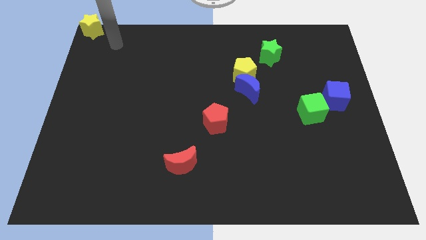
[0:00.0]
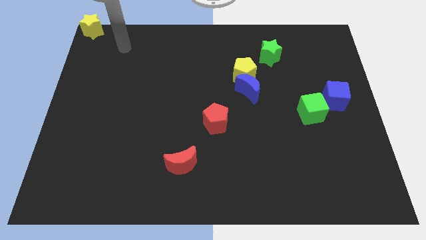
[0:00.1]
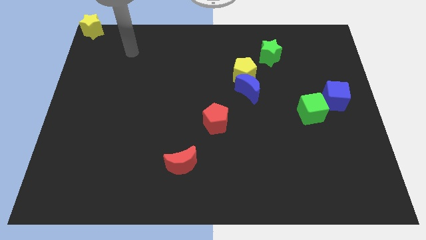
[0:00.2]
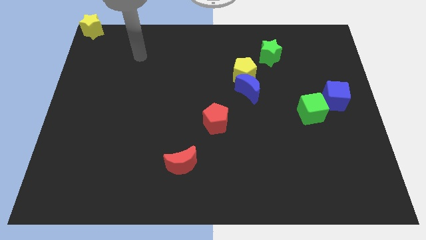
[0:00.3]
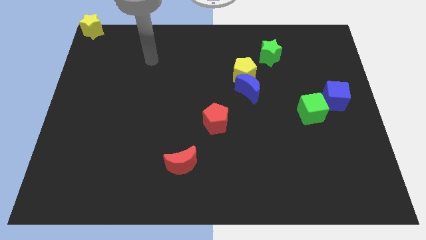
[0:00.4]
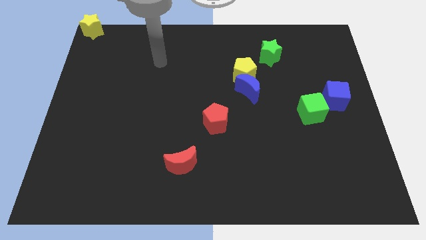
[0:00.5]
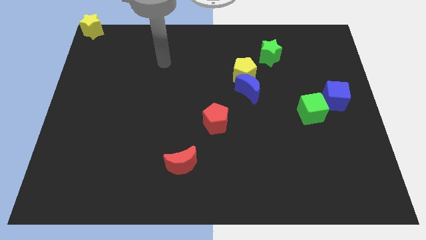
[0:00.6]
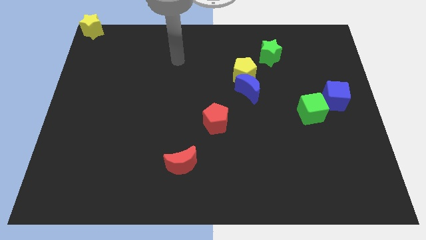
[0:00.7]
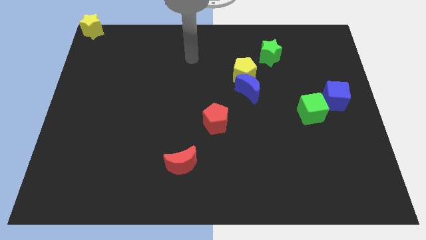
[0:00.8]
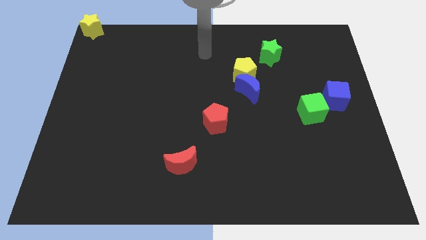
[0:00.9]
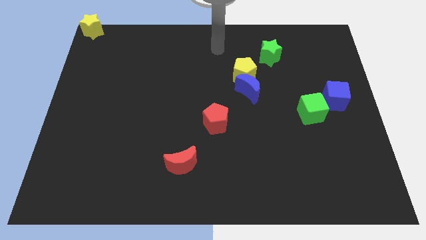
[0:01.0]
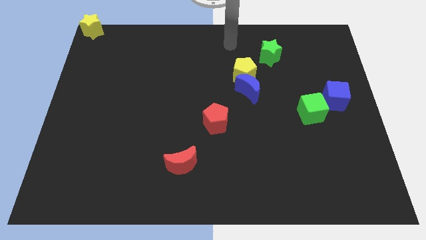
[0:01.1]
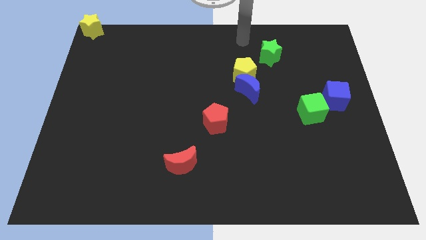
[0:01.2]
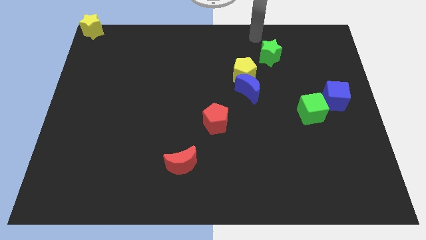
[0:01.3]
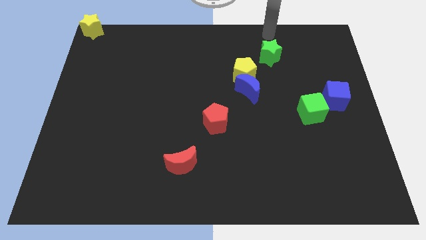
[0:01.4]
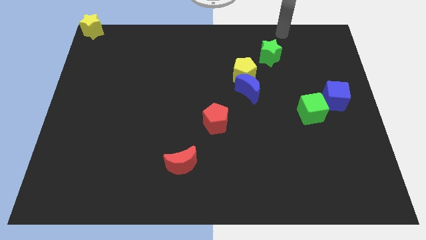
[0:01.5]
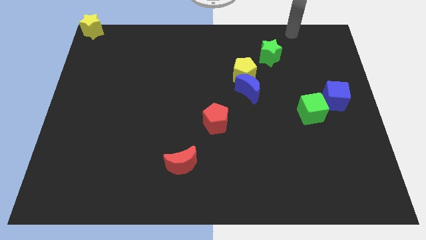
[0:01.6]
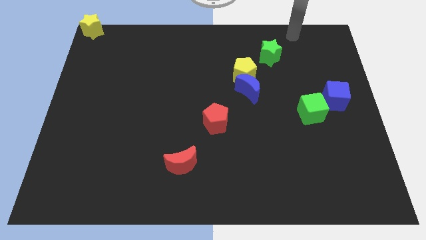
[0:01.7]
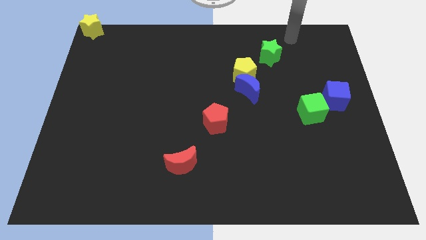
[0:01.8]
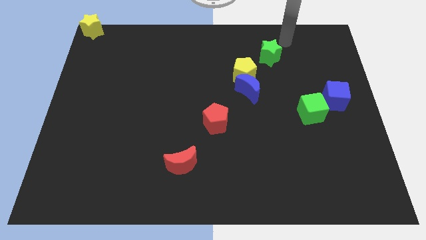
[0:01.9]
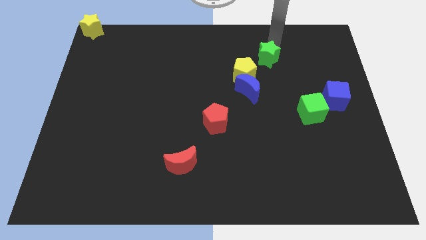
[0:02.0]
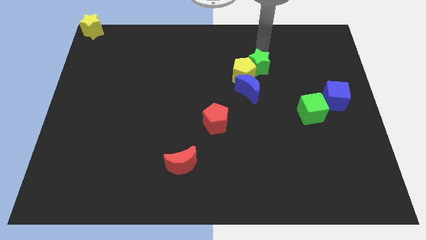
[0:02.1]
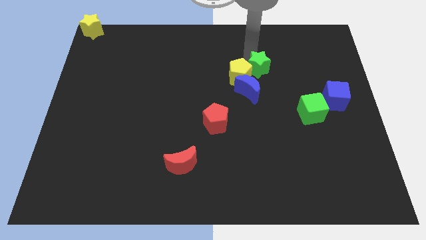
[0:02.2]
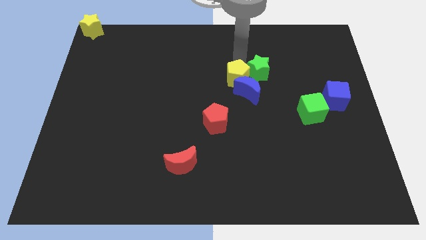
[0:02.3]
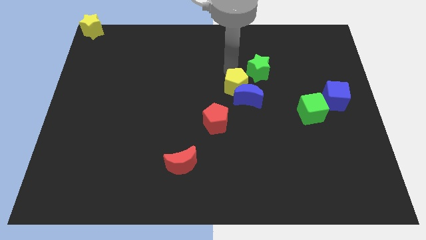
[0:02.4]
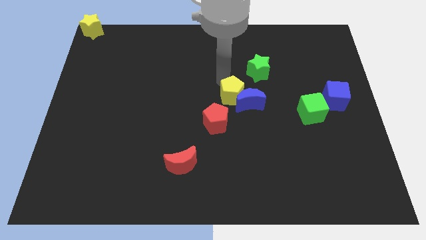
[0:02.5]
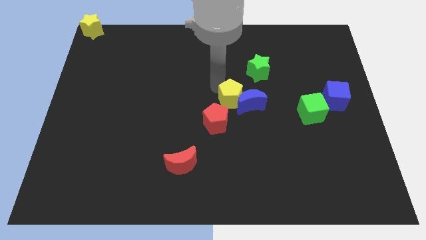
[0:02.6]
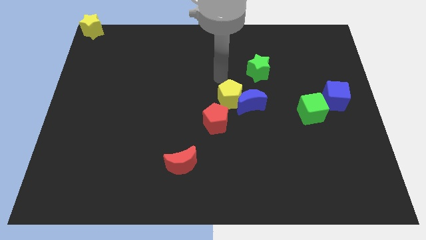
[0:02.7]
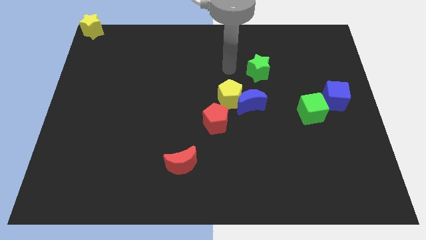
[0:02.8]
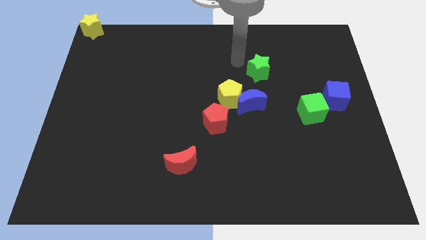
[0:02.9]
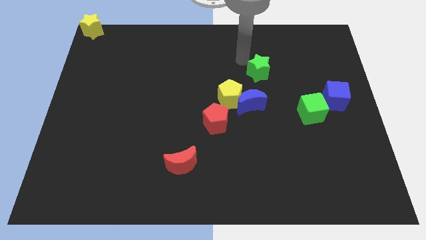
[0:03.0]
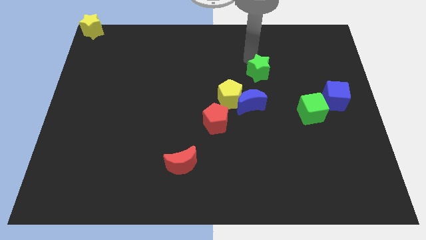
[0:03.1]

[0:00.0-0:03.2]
push the green star into the yellow pentagon

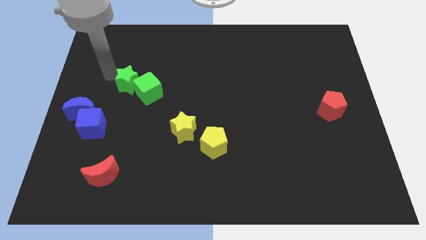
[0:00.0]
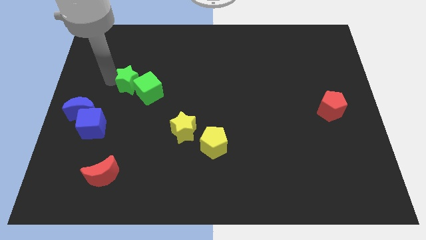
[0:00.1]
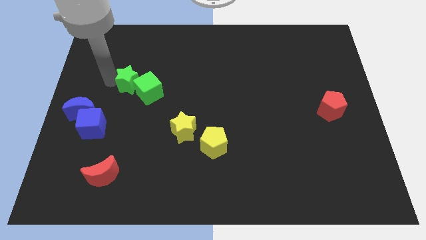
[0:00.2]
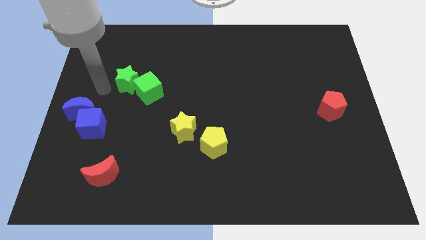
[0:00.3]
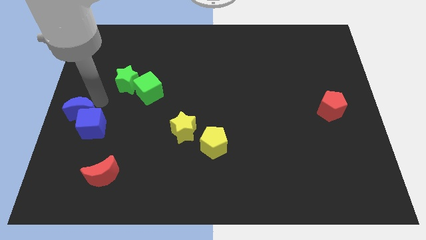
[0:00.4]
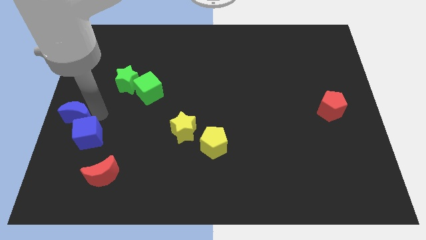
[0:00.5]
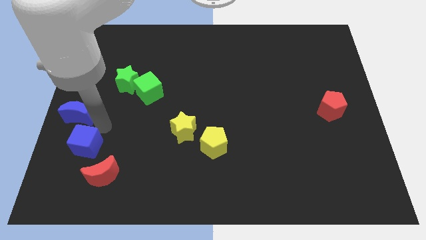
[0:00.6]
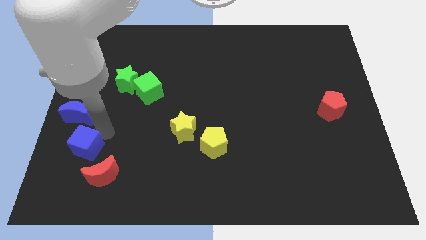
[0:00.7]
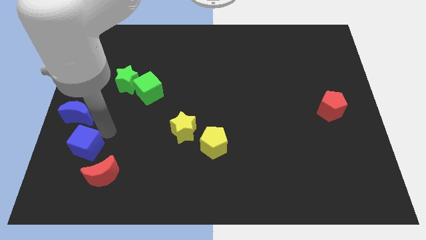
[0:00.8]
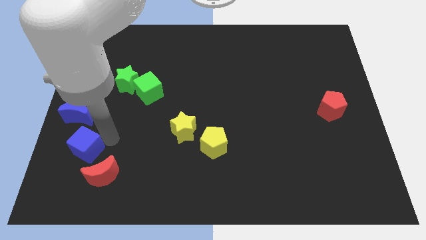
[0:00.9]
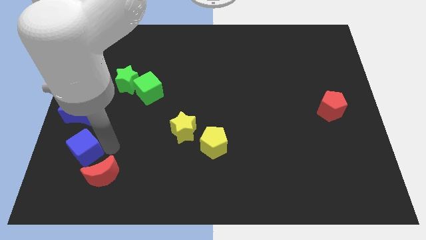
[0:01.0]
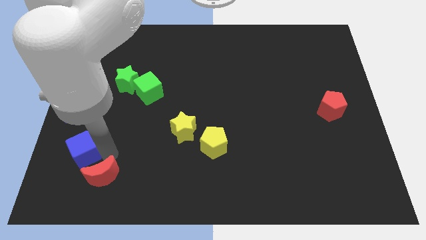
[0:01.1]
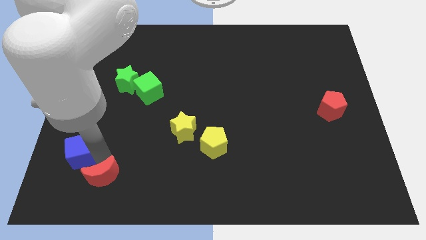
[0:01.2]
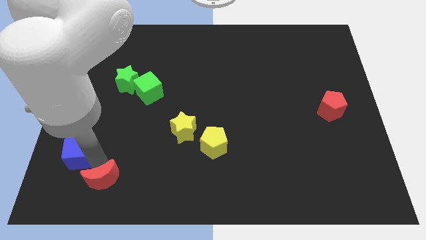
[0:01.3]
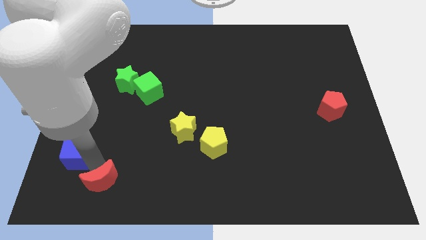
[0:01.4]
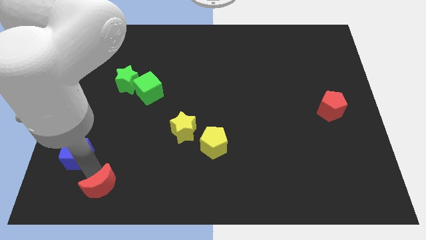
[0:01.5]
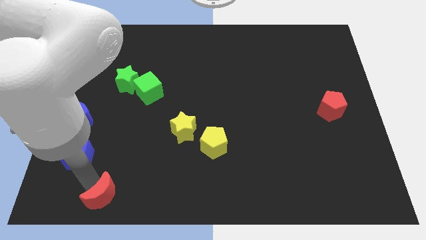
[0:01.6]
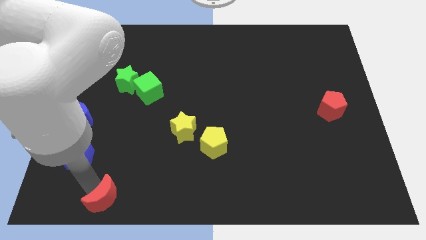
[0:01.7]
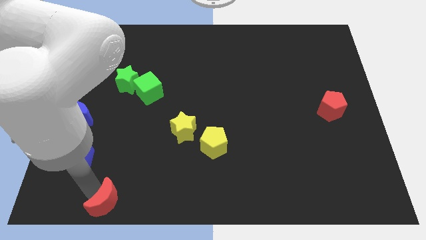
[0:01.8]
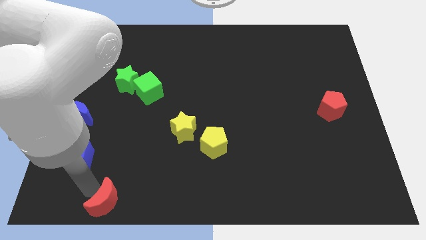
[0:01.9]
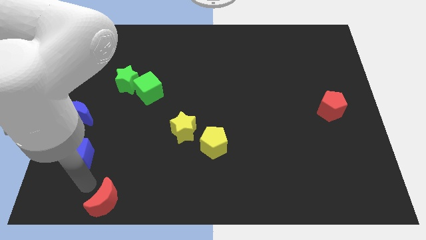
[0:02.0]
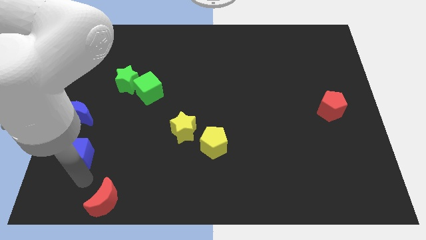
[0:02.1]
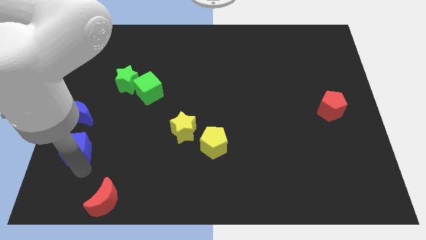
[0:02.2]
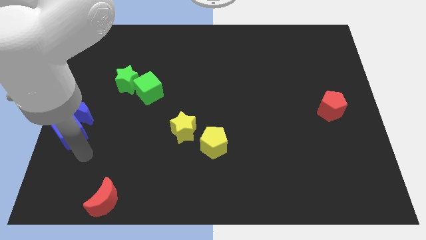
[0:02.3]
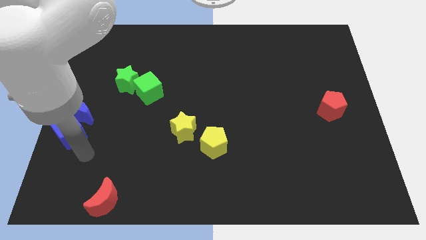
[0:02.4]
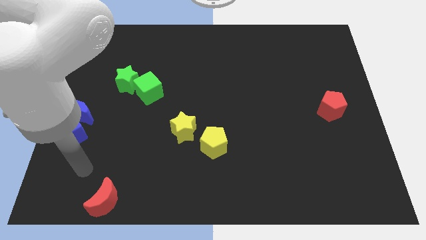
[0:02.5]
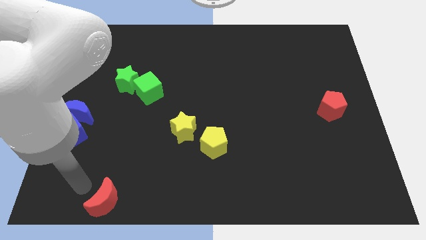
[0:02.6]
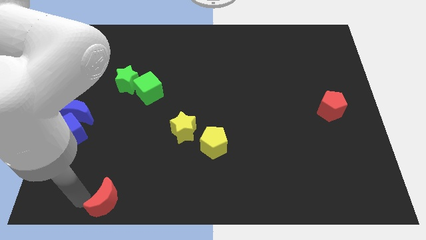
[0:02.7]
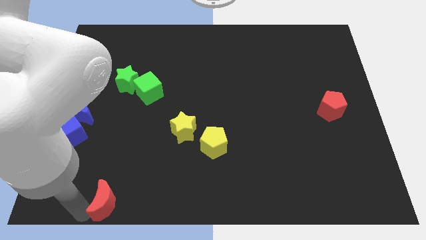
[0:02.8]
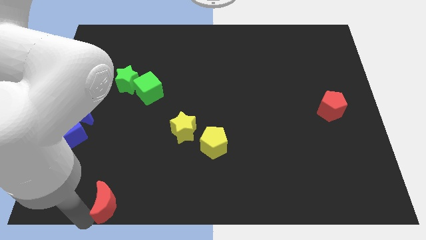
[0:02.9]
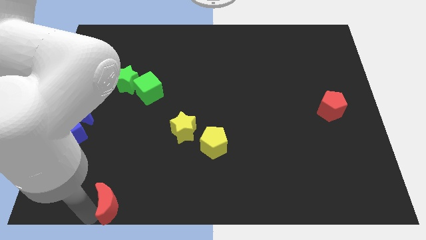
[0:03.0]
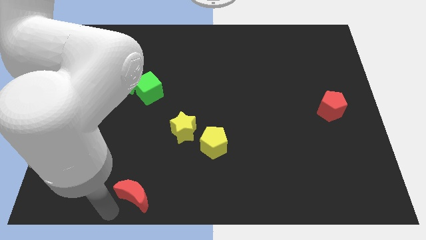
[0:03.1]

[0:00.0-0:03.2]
slide the red crescent towards the bottom

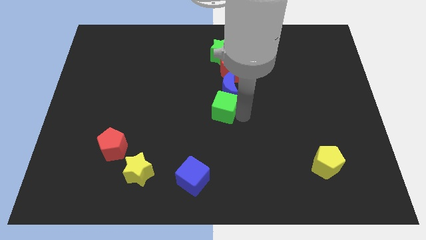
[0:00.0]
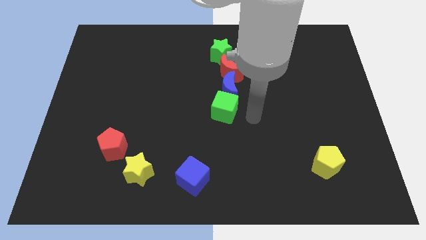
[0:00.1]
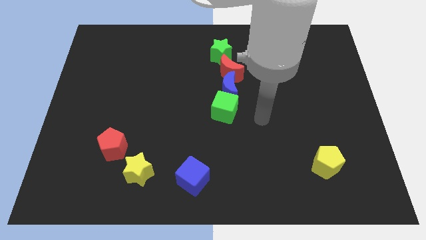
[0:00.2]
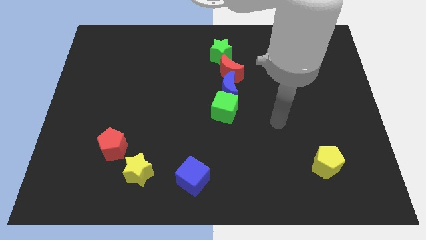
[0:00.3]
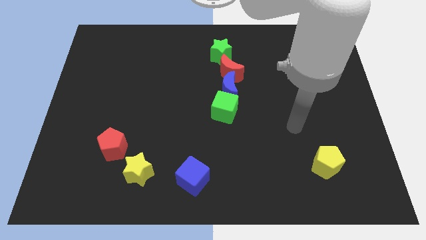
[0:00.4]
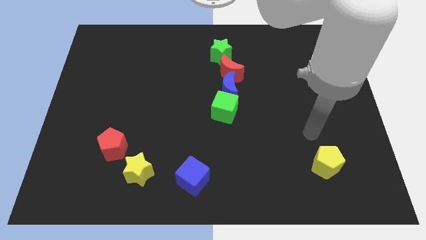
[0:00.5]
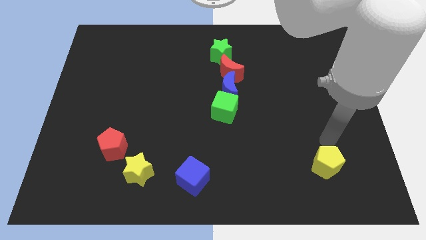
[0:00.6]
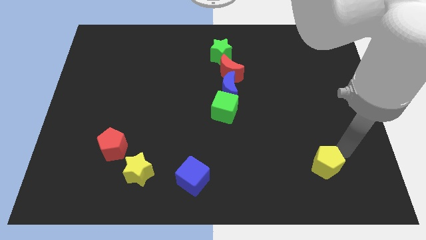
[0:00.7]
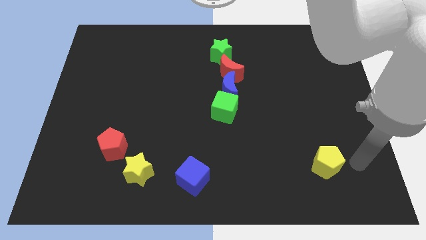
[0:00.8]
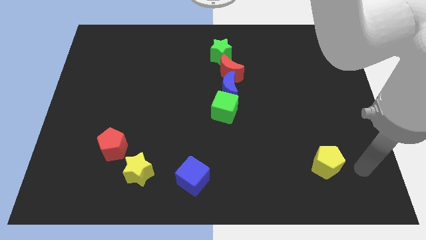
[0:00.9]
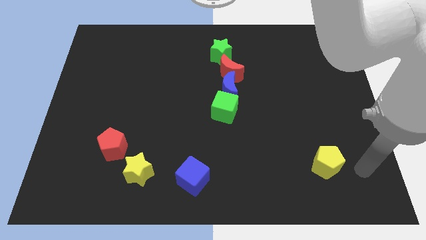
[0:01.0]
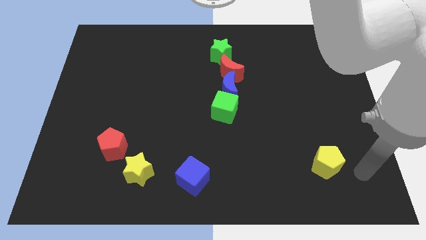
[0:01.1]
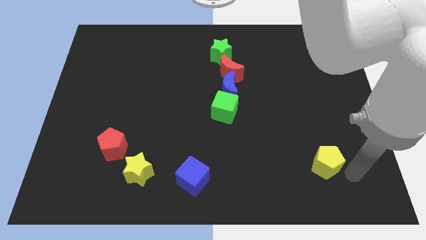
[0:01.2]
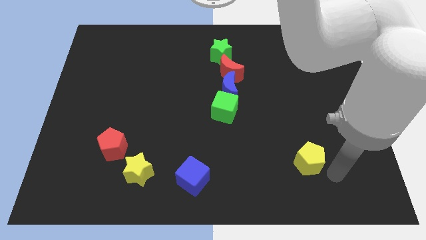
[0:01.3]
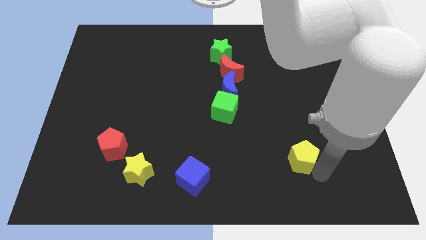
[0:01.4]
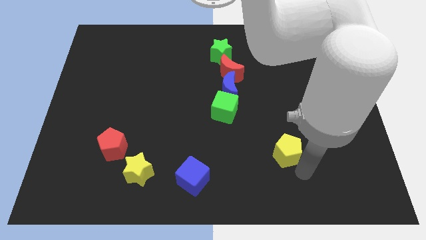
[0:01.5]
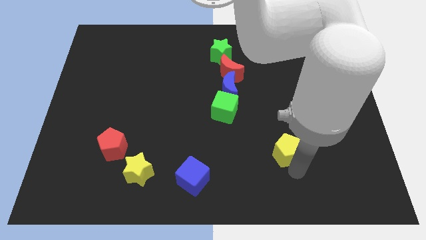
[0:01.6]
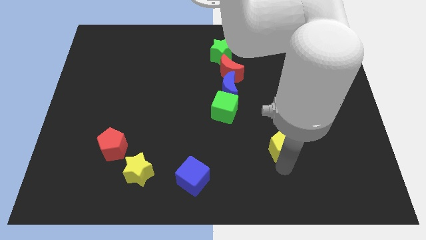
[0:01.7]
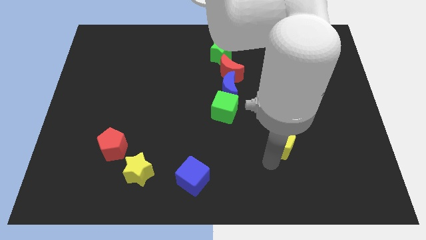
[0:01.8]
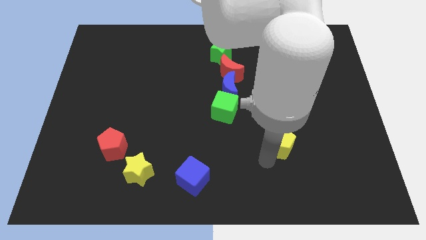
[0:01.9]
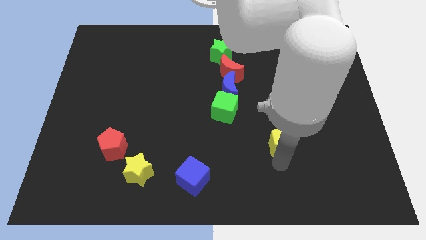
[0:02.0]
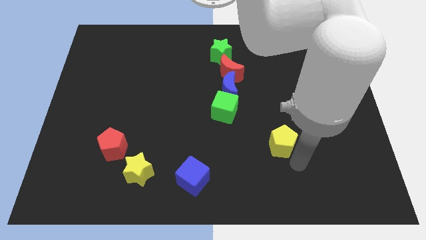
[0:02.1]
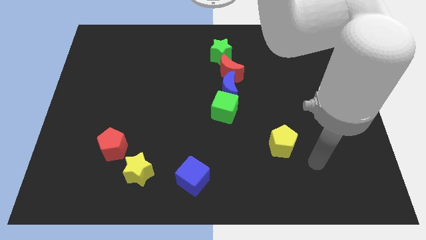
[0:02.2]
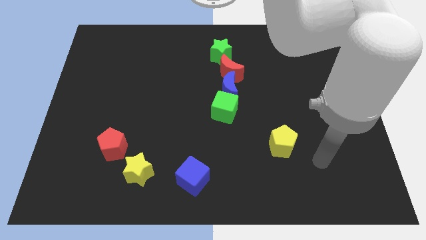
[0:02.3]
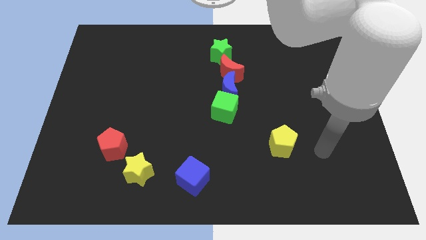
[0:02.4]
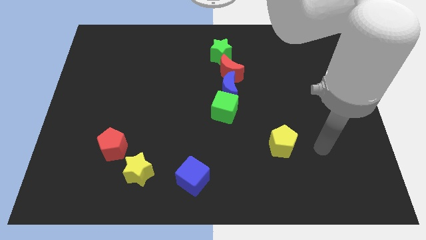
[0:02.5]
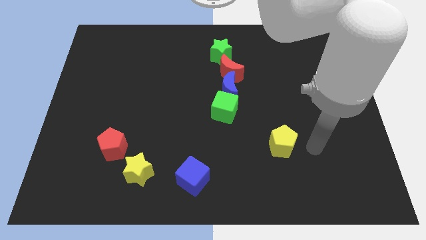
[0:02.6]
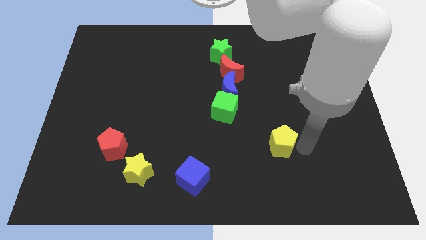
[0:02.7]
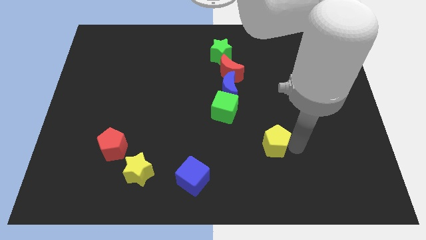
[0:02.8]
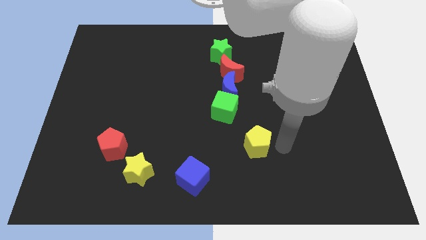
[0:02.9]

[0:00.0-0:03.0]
move the yellow pentagon to the center
